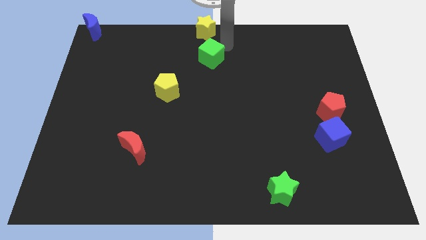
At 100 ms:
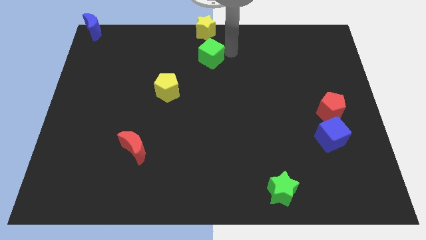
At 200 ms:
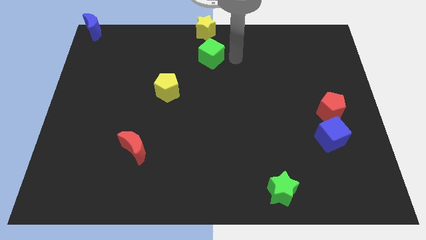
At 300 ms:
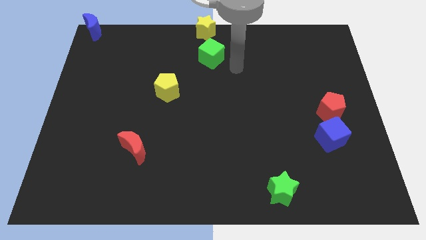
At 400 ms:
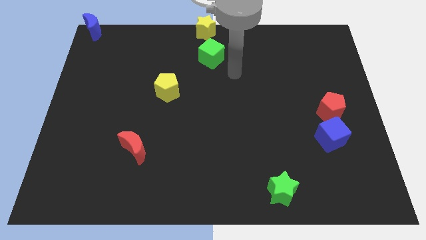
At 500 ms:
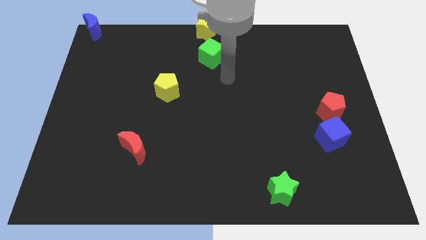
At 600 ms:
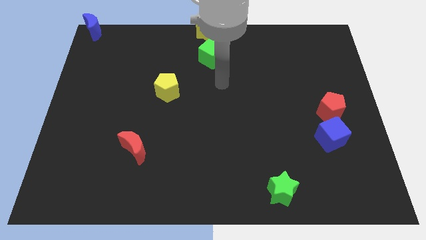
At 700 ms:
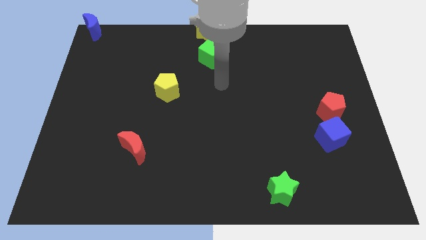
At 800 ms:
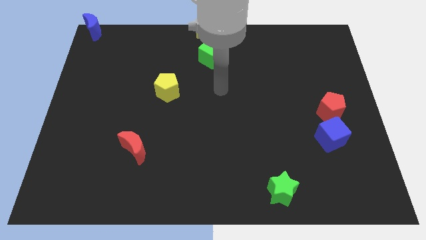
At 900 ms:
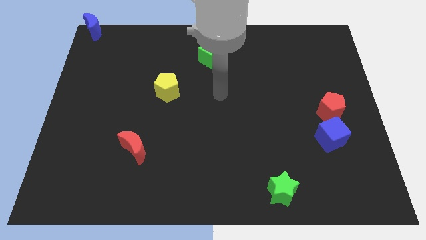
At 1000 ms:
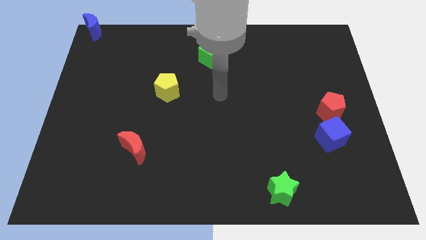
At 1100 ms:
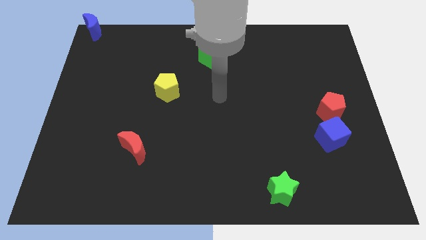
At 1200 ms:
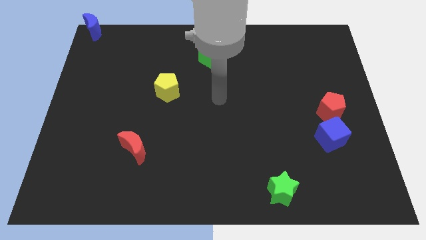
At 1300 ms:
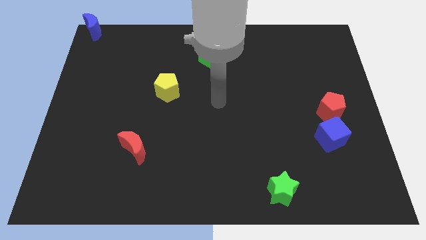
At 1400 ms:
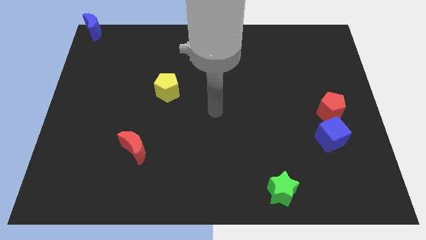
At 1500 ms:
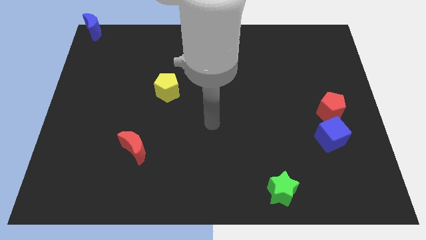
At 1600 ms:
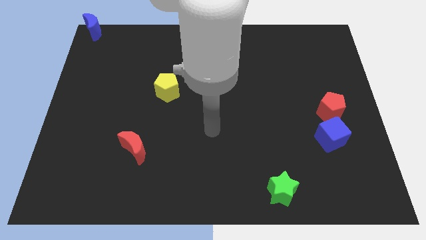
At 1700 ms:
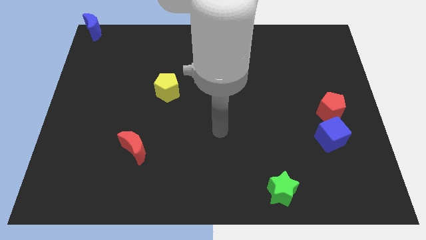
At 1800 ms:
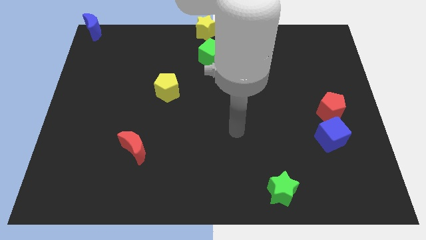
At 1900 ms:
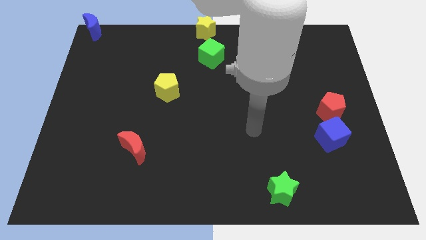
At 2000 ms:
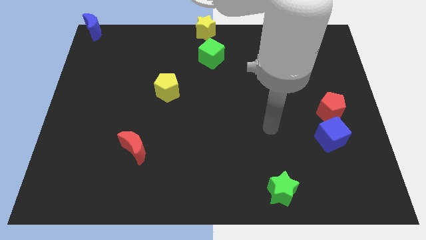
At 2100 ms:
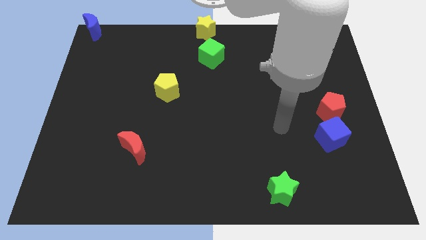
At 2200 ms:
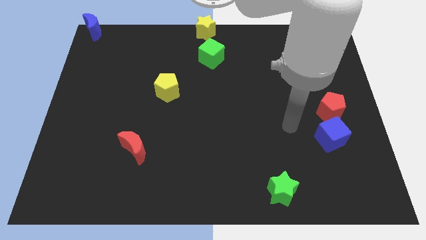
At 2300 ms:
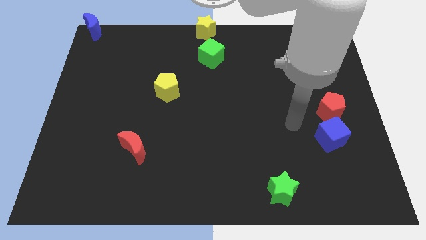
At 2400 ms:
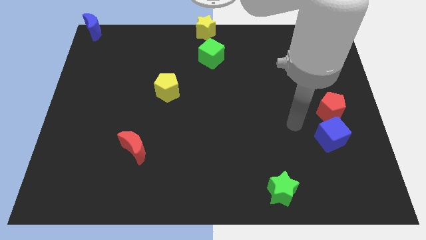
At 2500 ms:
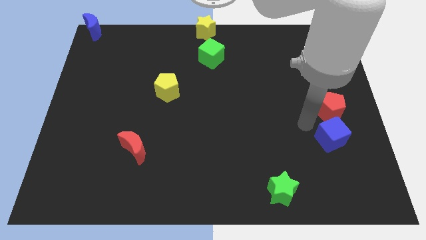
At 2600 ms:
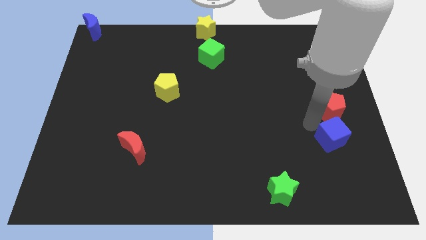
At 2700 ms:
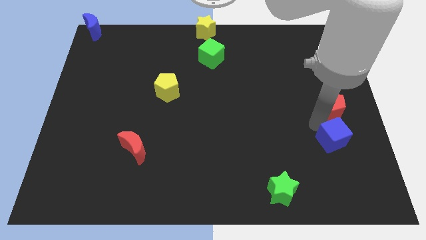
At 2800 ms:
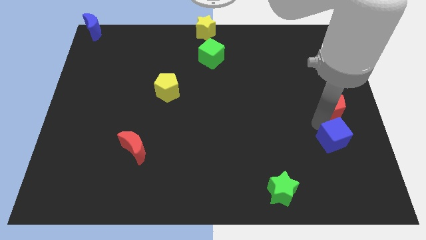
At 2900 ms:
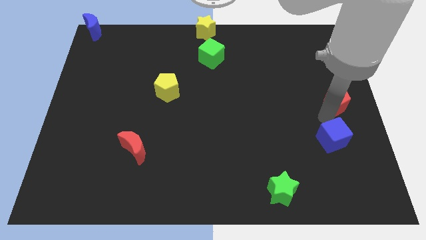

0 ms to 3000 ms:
place the arm over blue cube

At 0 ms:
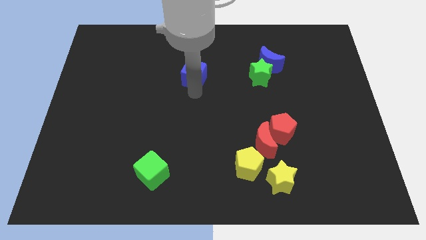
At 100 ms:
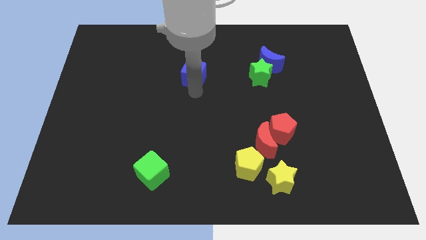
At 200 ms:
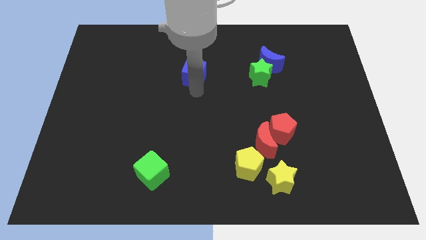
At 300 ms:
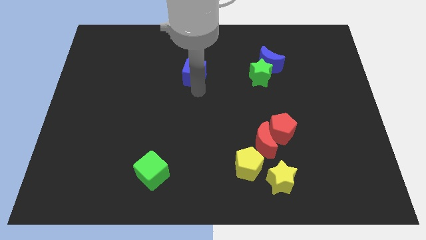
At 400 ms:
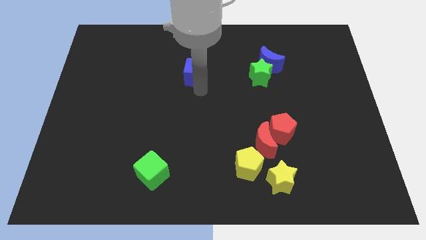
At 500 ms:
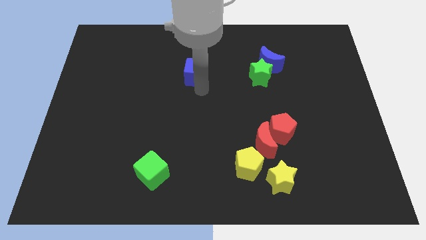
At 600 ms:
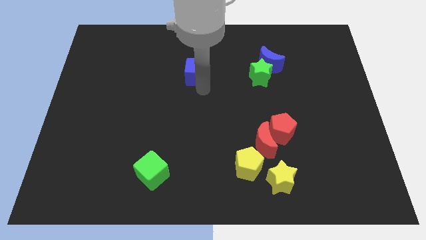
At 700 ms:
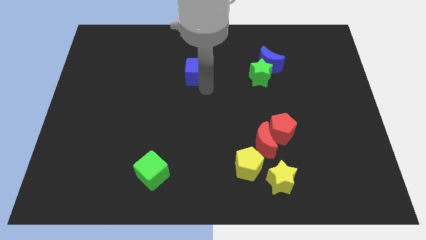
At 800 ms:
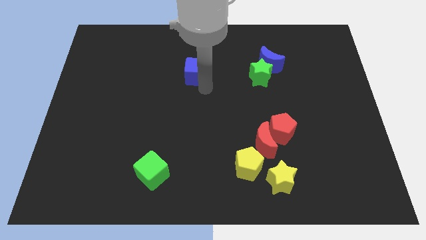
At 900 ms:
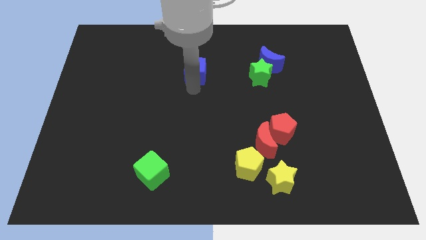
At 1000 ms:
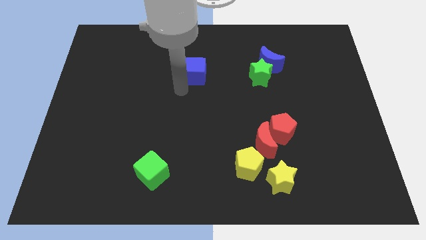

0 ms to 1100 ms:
place the blue cube to the left of the green star

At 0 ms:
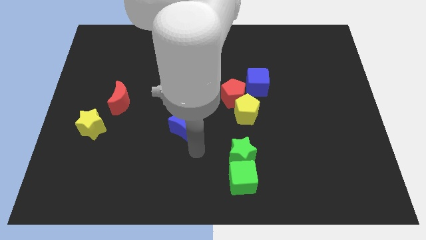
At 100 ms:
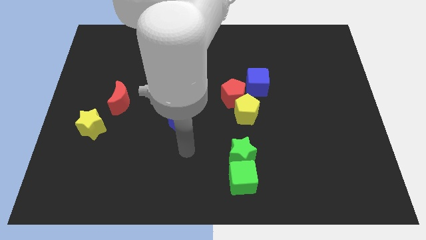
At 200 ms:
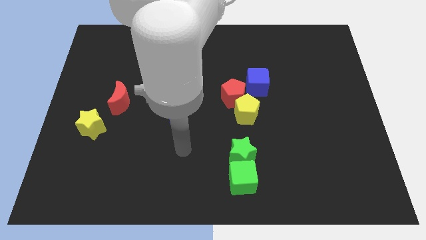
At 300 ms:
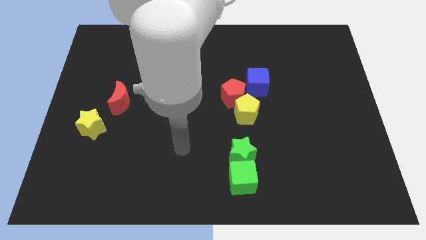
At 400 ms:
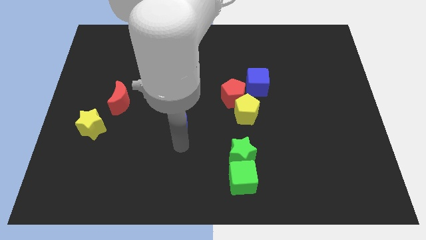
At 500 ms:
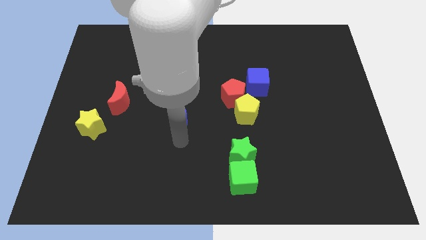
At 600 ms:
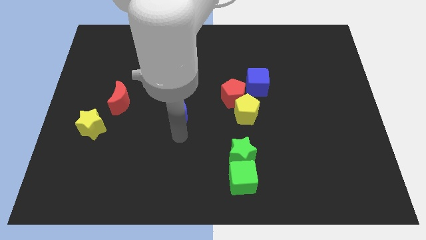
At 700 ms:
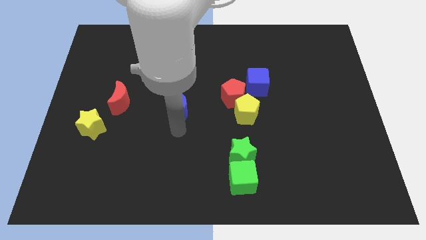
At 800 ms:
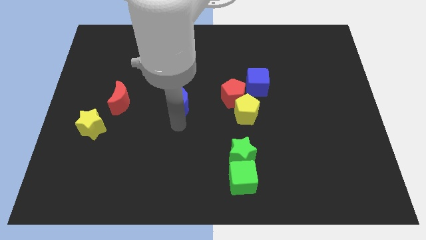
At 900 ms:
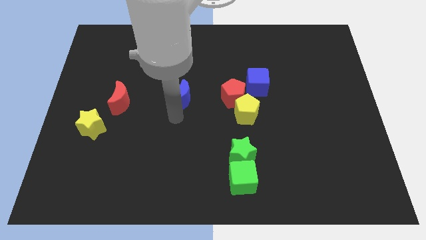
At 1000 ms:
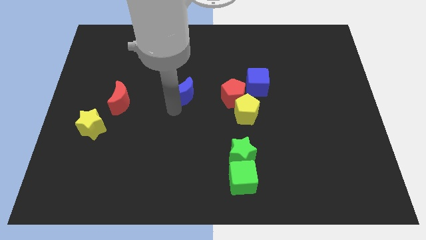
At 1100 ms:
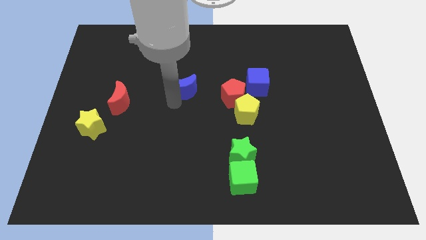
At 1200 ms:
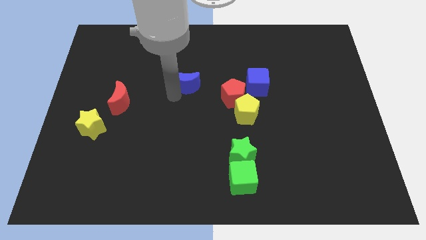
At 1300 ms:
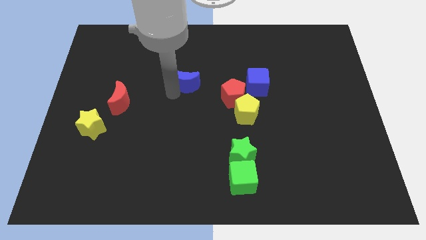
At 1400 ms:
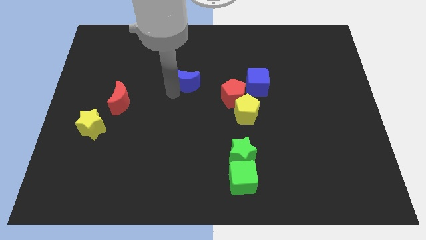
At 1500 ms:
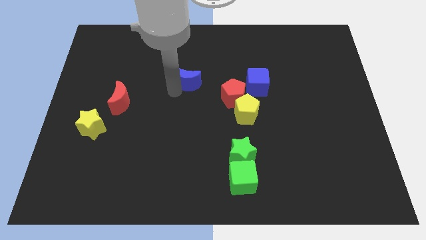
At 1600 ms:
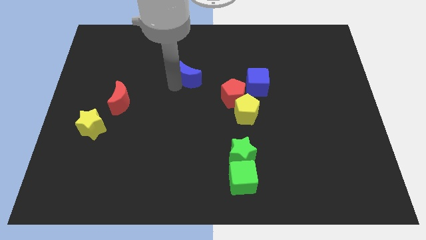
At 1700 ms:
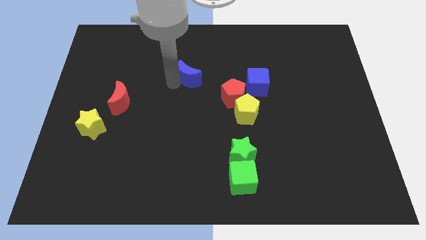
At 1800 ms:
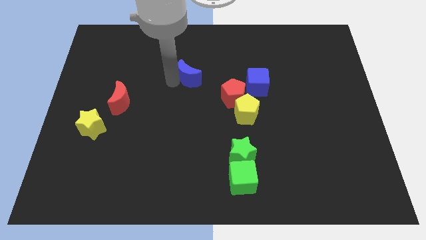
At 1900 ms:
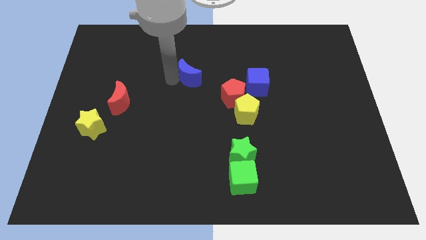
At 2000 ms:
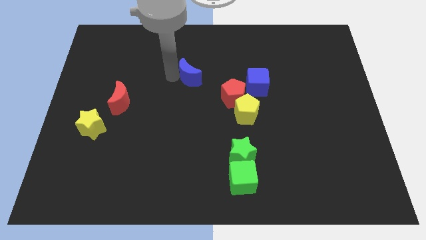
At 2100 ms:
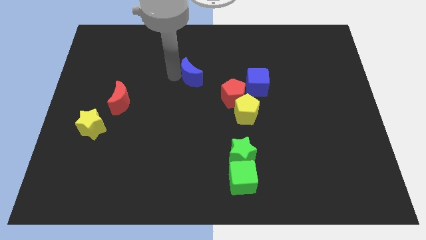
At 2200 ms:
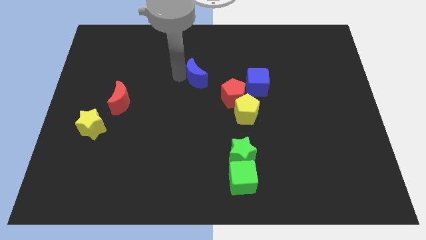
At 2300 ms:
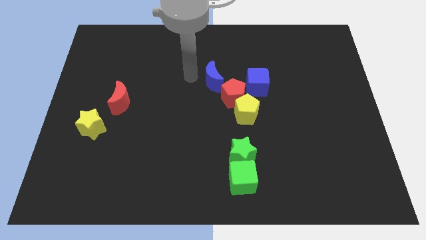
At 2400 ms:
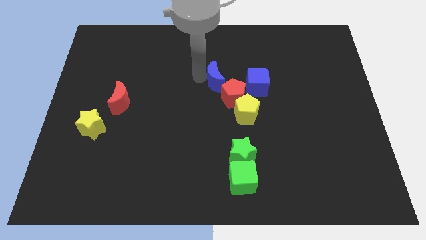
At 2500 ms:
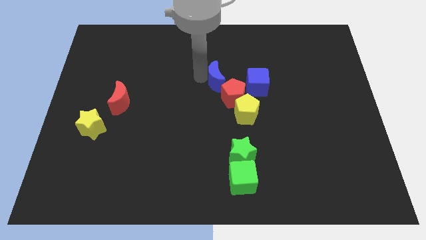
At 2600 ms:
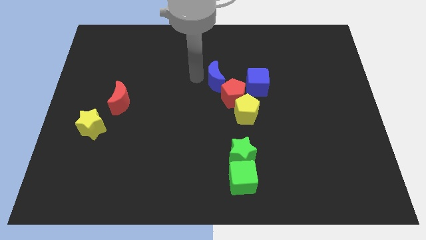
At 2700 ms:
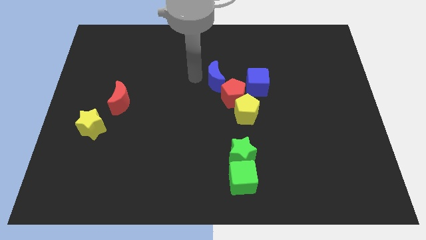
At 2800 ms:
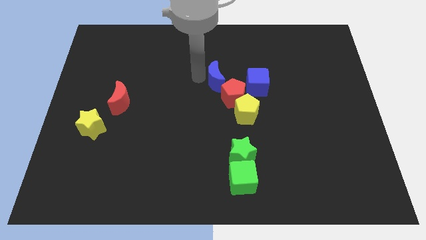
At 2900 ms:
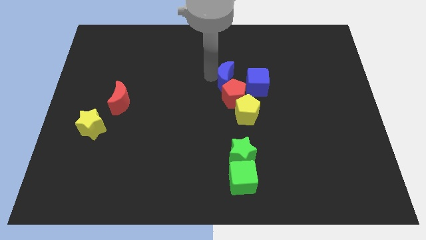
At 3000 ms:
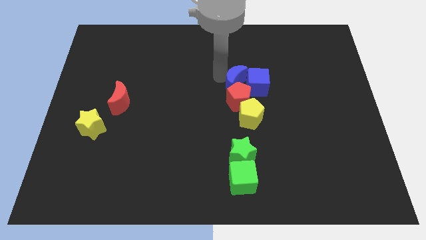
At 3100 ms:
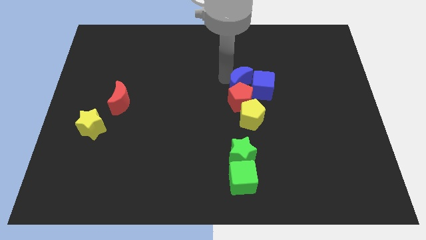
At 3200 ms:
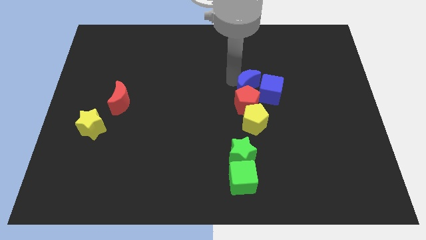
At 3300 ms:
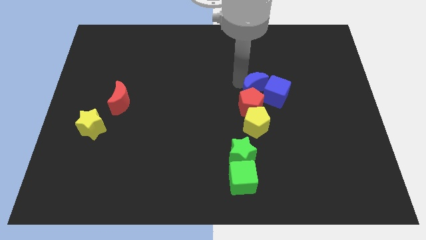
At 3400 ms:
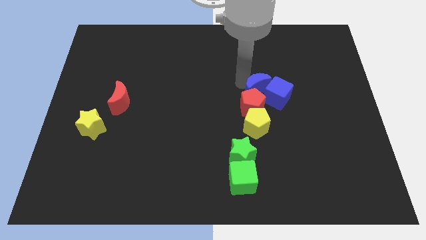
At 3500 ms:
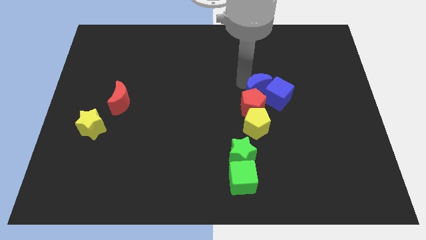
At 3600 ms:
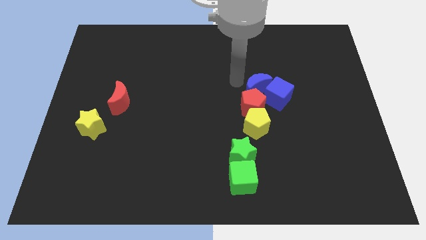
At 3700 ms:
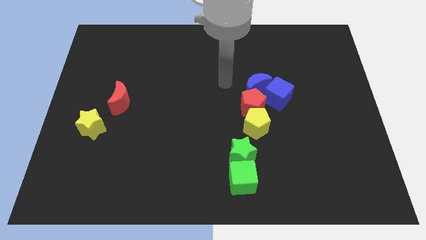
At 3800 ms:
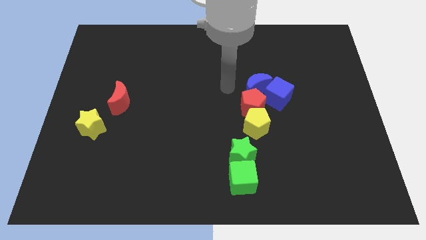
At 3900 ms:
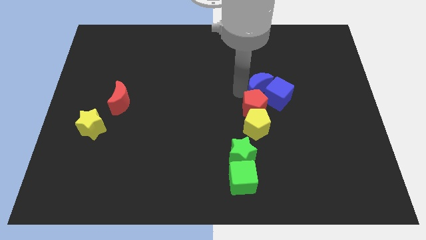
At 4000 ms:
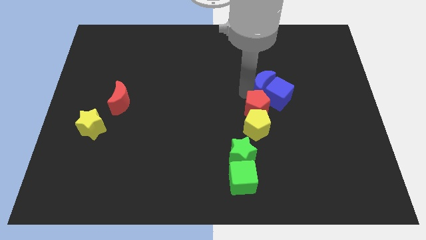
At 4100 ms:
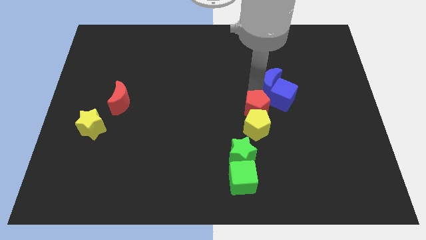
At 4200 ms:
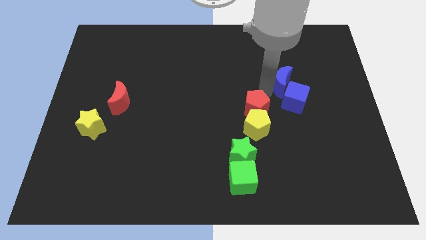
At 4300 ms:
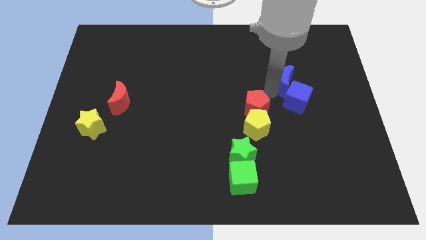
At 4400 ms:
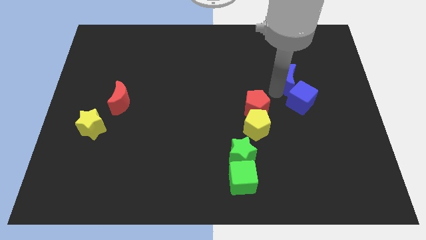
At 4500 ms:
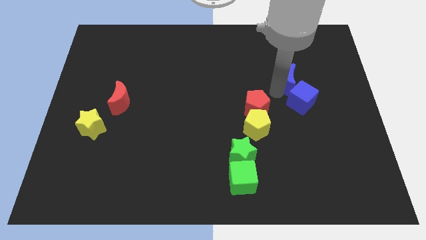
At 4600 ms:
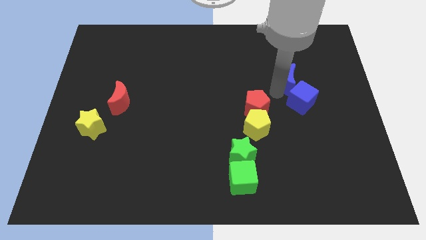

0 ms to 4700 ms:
push the blue cube with the help of blue crescent

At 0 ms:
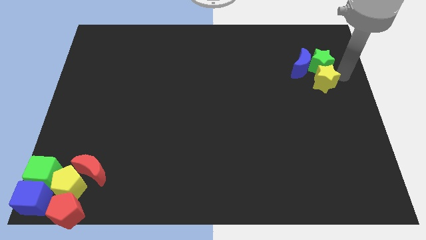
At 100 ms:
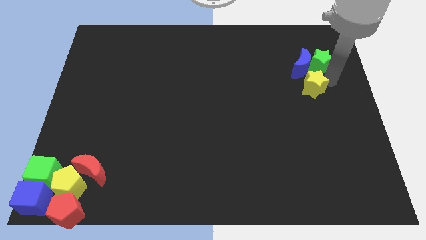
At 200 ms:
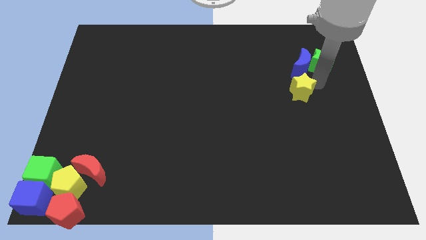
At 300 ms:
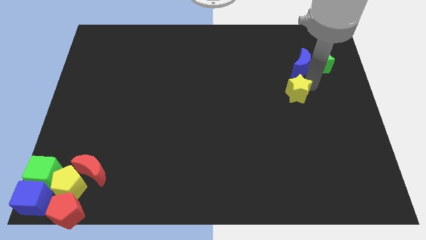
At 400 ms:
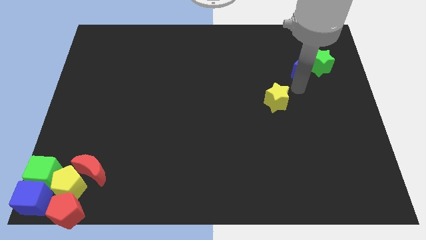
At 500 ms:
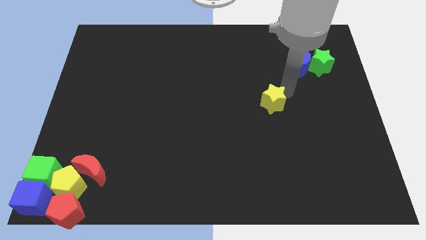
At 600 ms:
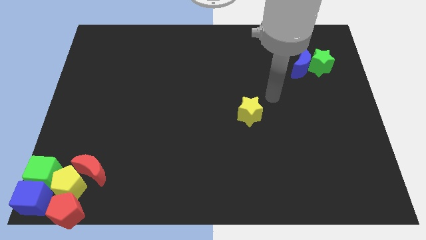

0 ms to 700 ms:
separate yellow star from green star
